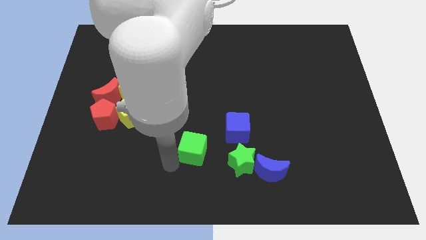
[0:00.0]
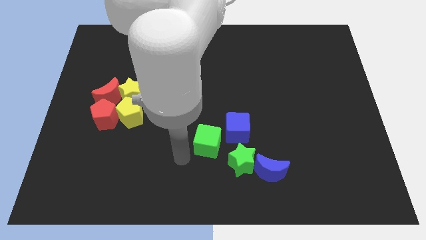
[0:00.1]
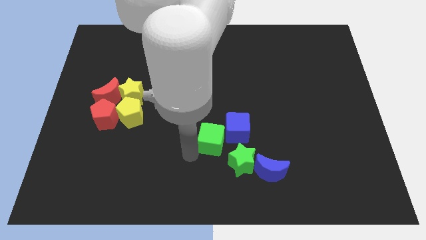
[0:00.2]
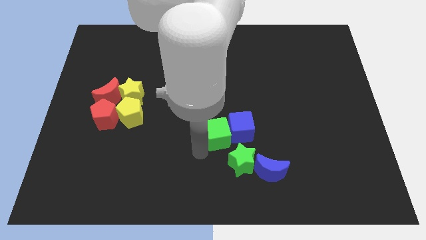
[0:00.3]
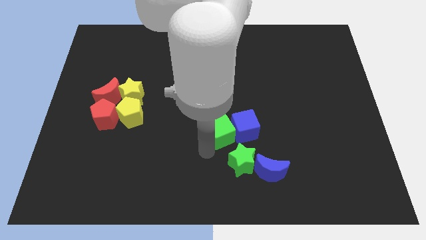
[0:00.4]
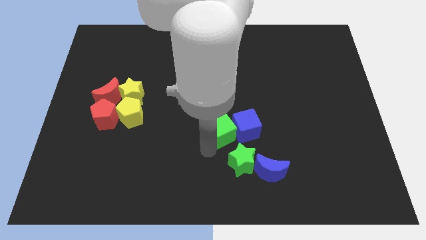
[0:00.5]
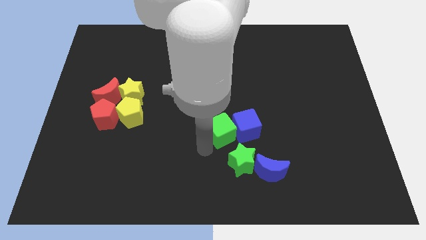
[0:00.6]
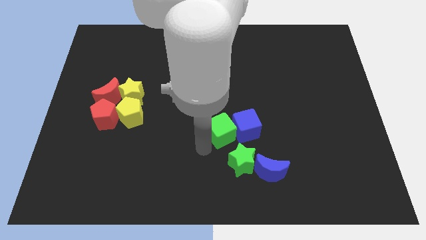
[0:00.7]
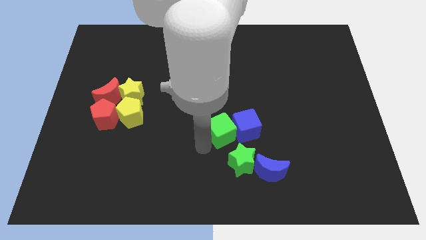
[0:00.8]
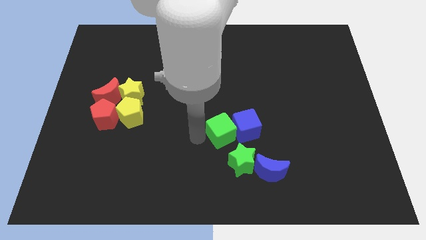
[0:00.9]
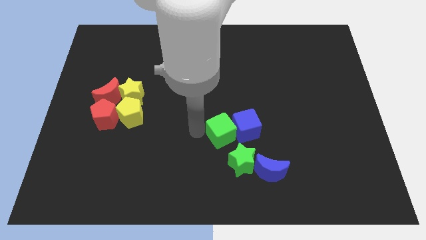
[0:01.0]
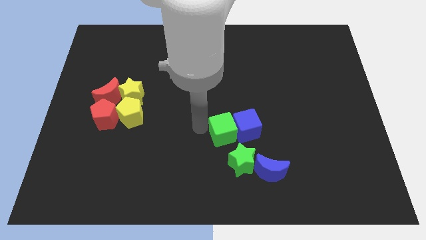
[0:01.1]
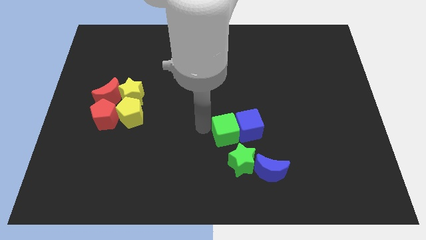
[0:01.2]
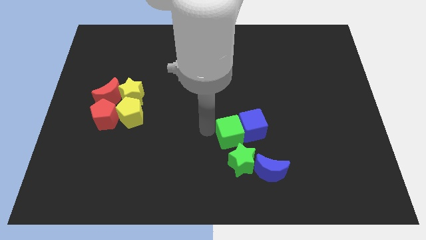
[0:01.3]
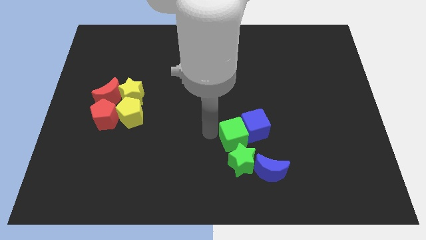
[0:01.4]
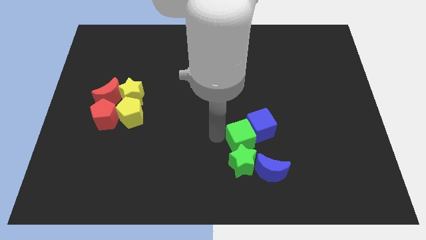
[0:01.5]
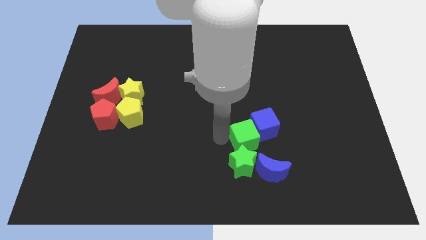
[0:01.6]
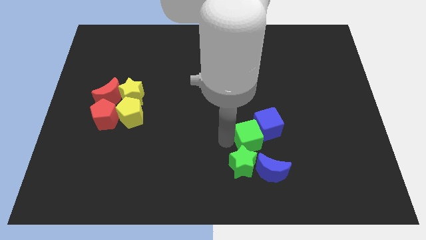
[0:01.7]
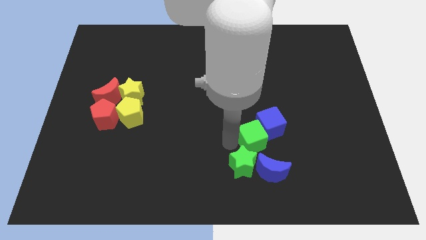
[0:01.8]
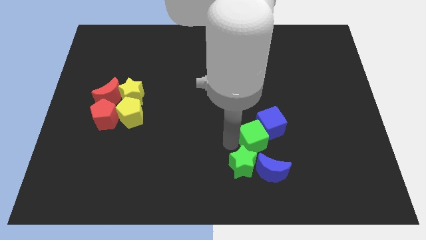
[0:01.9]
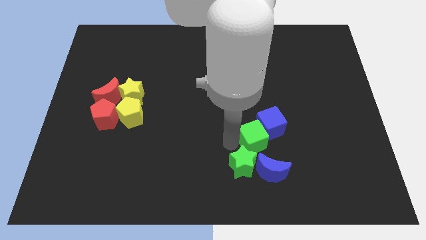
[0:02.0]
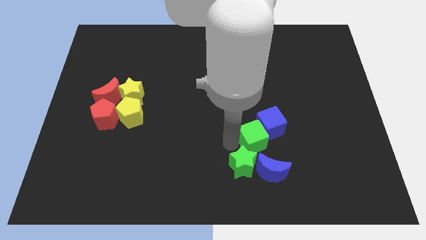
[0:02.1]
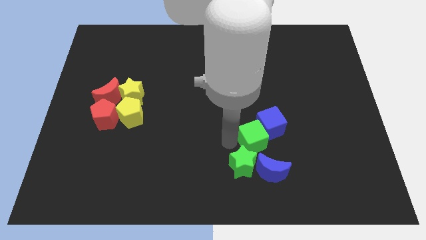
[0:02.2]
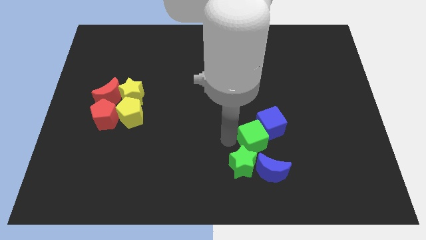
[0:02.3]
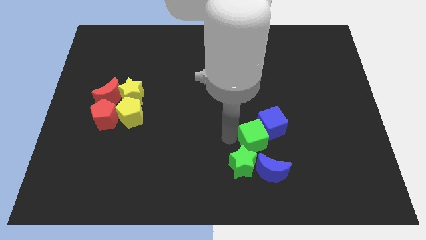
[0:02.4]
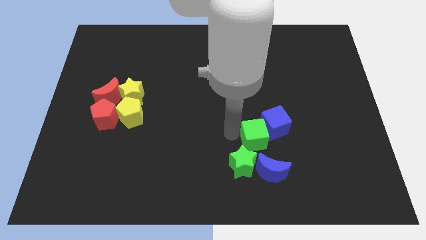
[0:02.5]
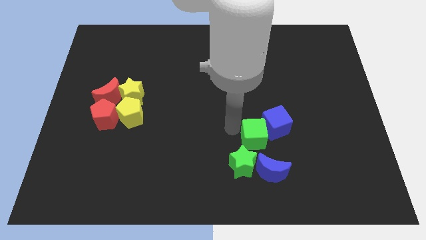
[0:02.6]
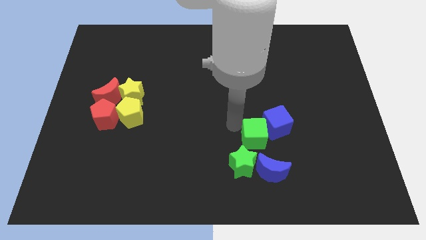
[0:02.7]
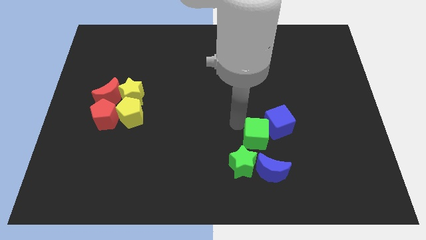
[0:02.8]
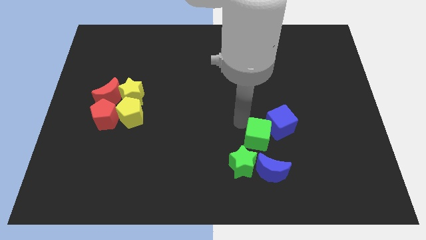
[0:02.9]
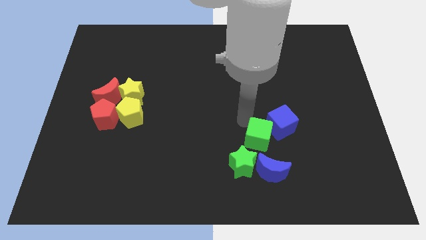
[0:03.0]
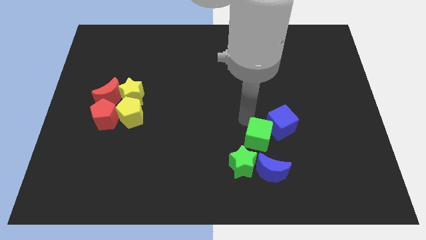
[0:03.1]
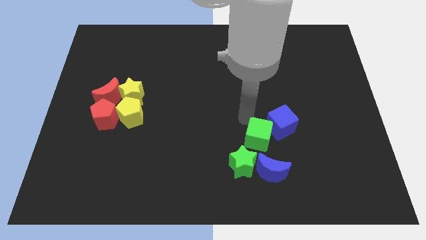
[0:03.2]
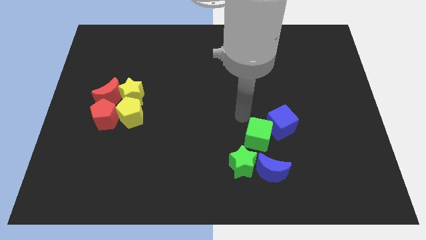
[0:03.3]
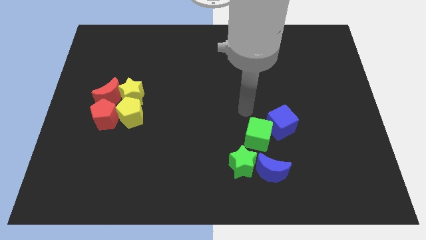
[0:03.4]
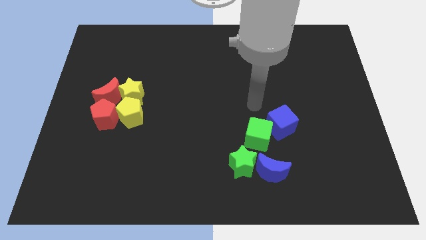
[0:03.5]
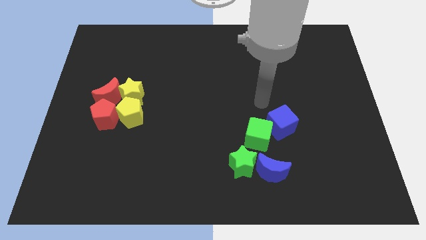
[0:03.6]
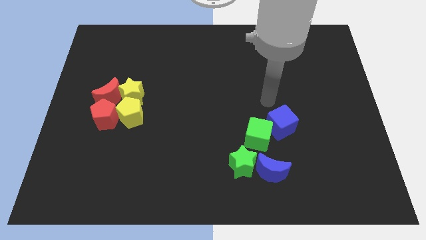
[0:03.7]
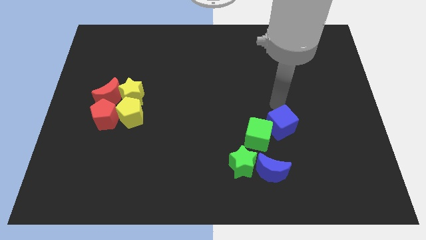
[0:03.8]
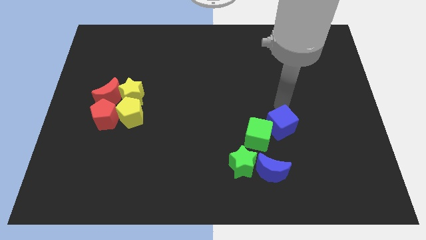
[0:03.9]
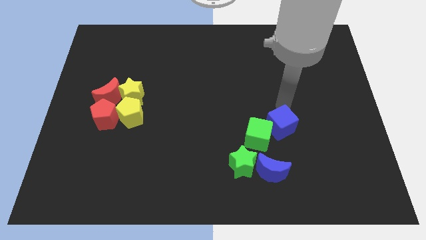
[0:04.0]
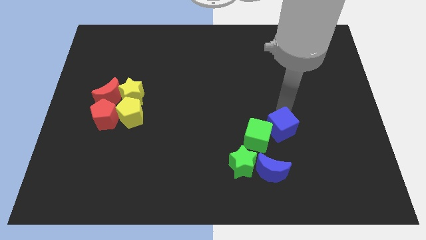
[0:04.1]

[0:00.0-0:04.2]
place green cube on top of green star and blue moon

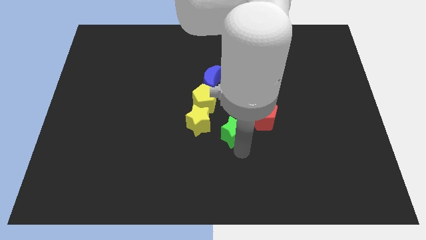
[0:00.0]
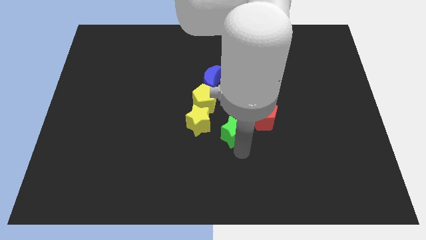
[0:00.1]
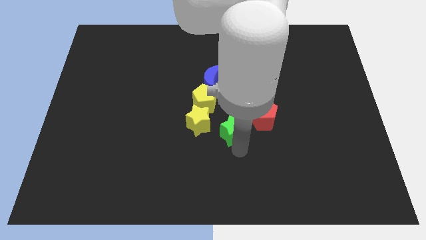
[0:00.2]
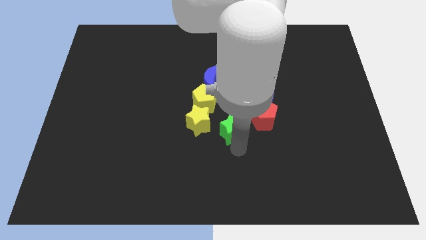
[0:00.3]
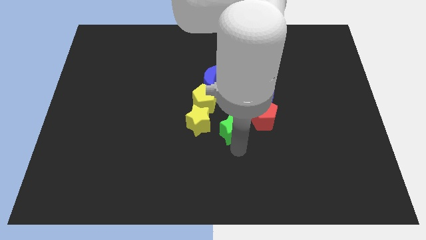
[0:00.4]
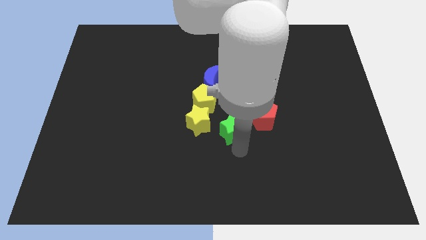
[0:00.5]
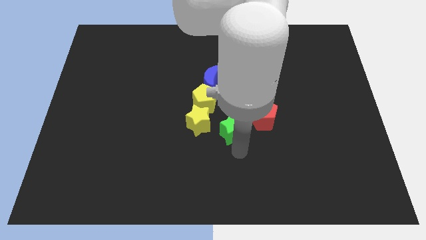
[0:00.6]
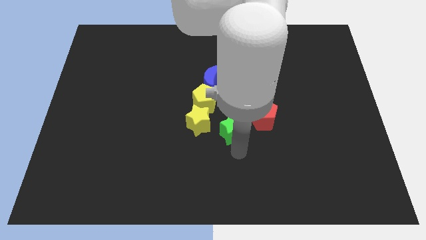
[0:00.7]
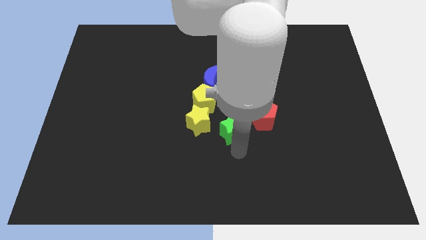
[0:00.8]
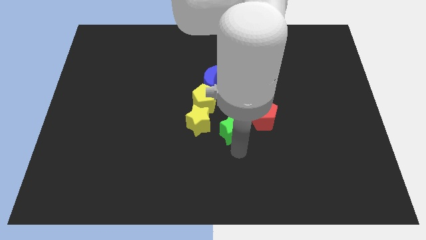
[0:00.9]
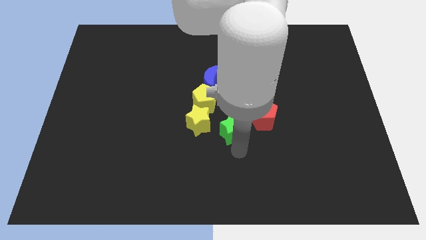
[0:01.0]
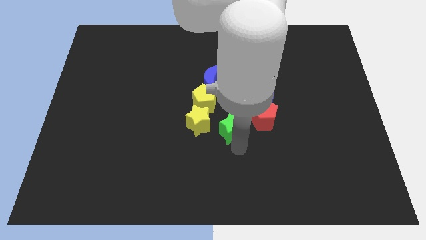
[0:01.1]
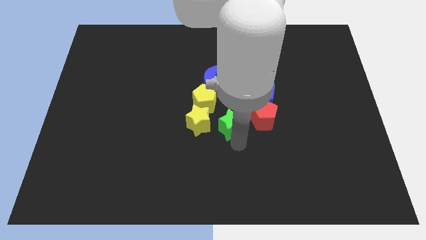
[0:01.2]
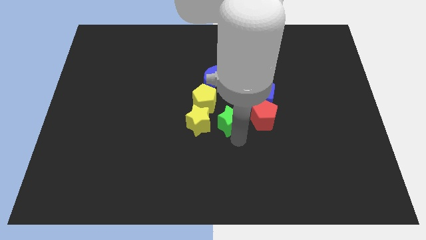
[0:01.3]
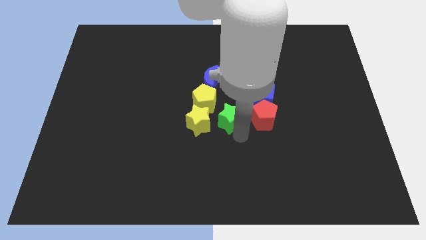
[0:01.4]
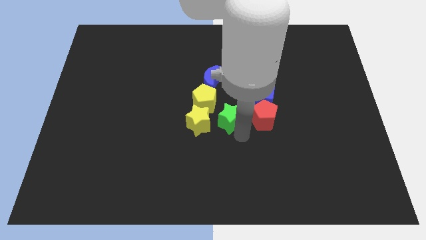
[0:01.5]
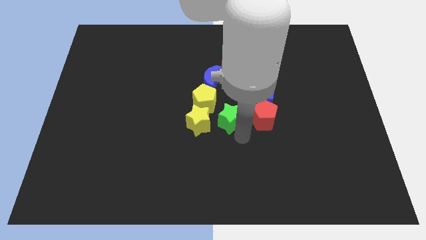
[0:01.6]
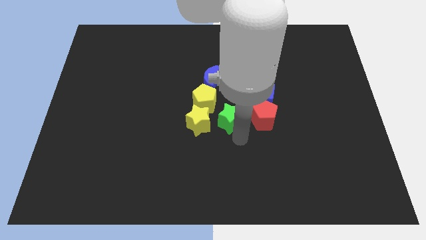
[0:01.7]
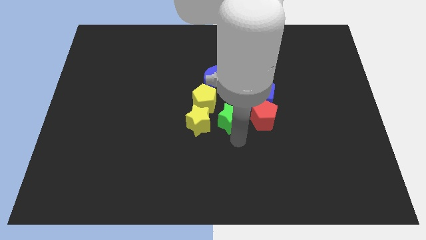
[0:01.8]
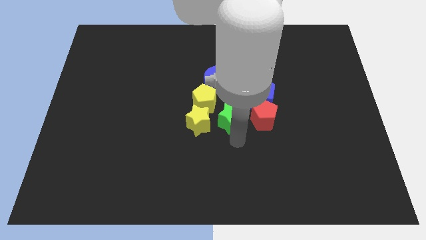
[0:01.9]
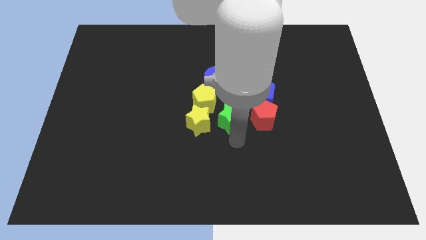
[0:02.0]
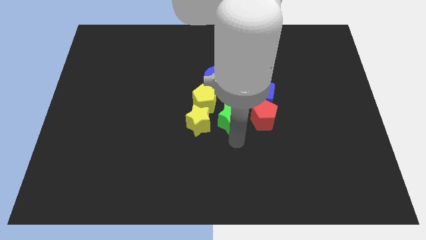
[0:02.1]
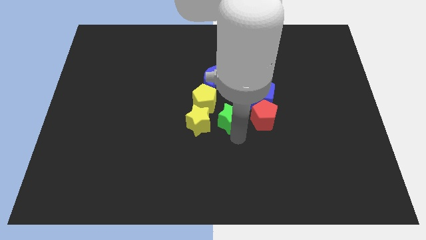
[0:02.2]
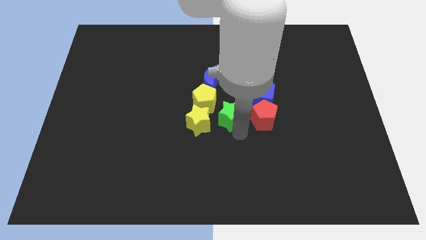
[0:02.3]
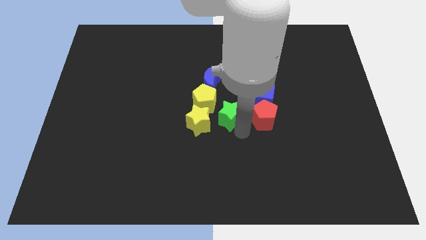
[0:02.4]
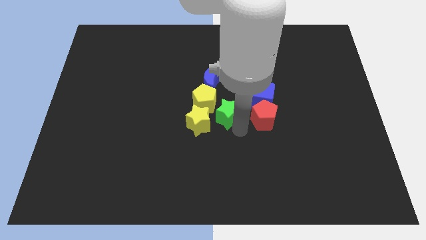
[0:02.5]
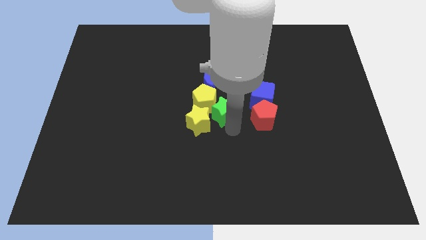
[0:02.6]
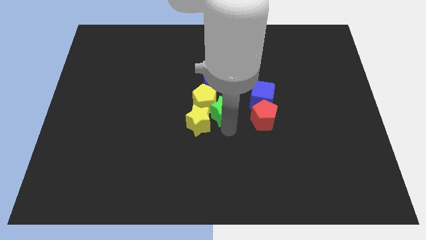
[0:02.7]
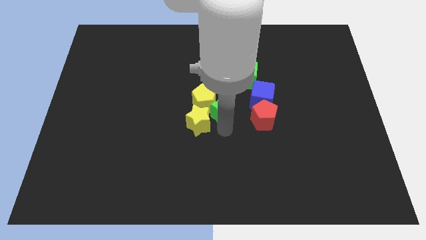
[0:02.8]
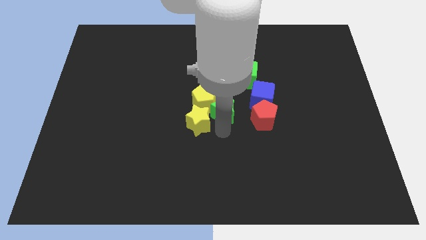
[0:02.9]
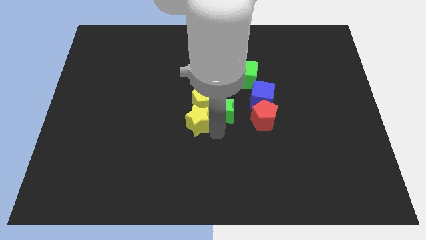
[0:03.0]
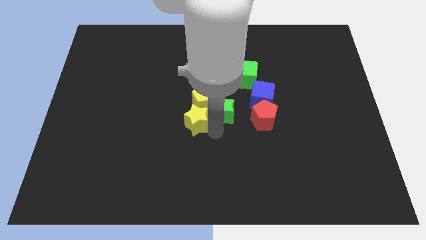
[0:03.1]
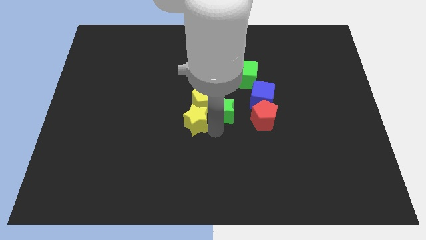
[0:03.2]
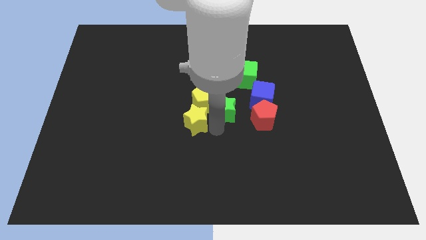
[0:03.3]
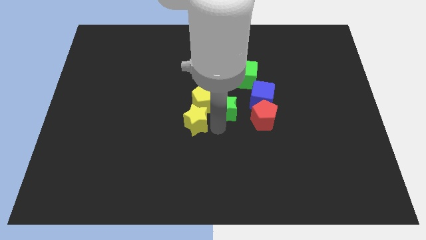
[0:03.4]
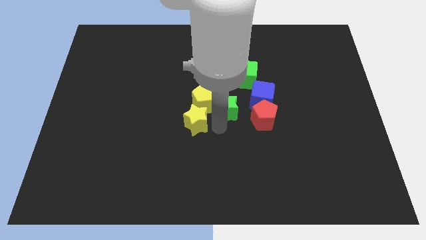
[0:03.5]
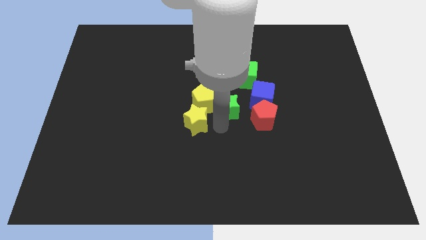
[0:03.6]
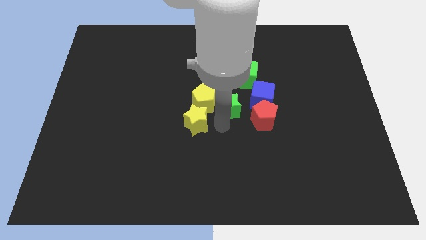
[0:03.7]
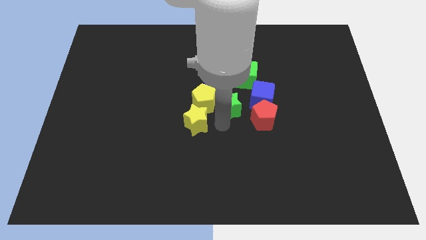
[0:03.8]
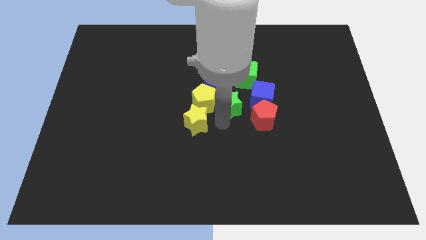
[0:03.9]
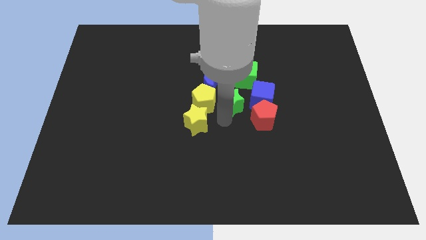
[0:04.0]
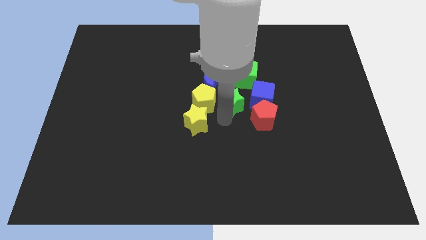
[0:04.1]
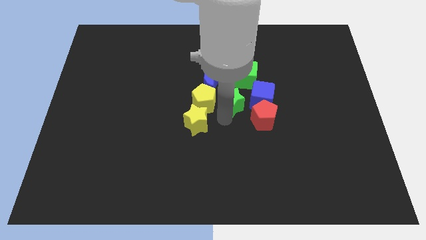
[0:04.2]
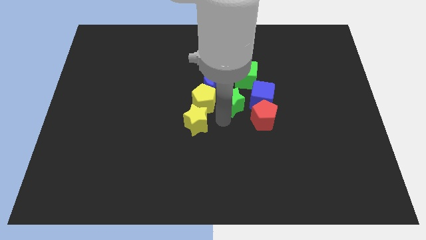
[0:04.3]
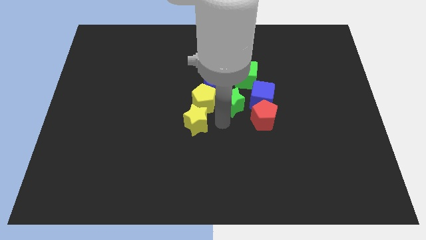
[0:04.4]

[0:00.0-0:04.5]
move green star below green cube

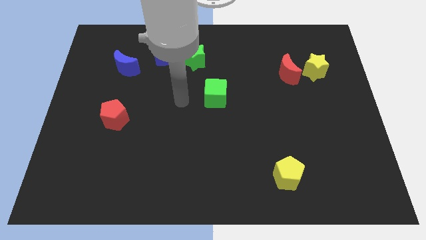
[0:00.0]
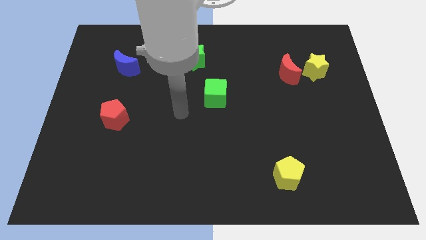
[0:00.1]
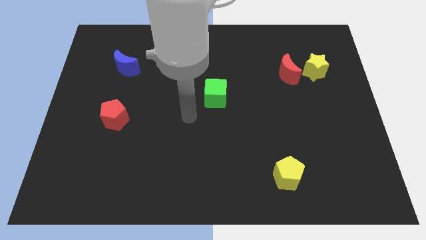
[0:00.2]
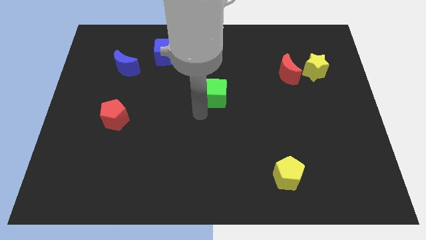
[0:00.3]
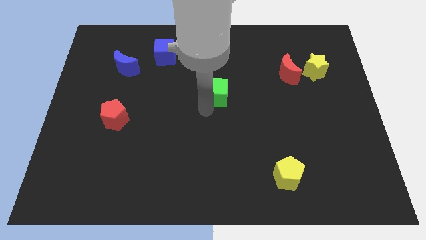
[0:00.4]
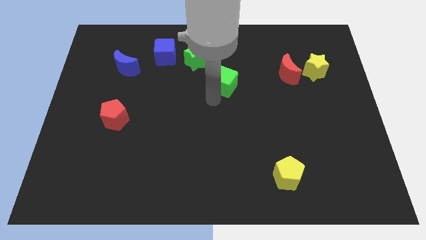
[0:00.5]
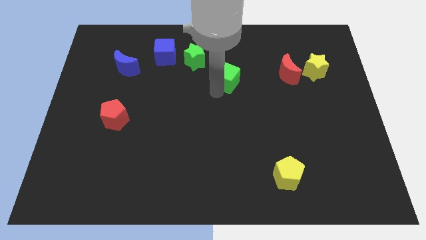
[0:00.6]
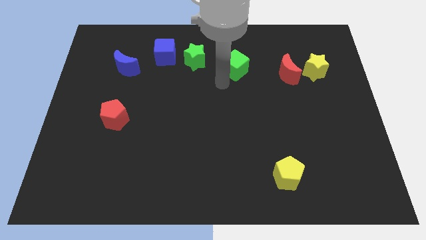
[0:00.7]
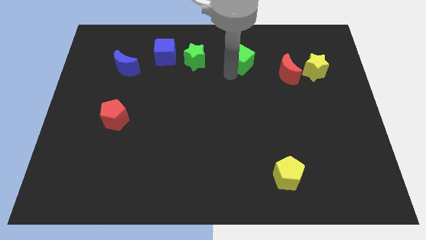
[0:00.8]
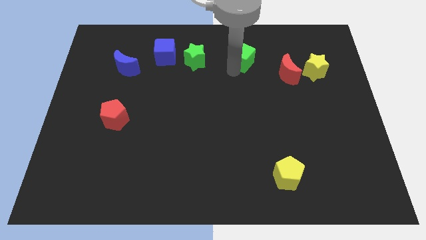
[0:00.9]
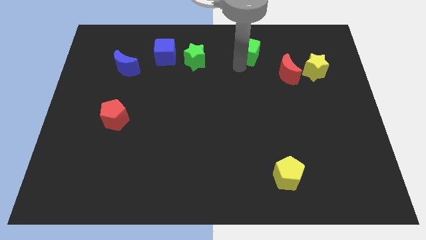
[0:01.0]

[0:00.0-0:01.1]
push the green cube to the right side of the green star
